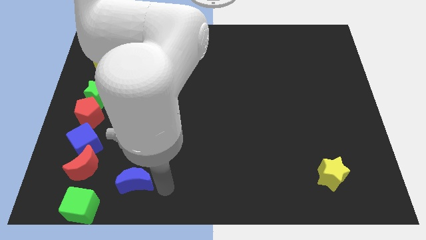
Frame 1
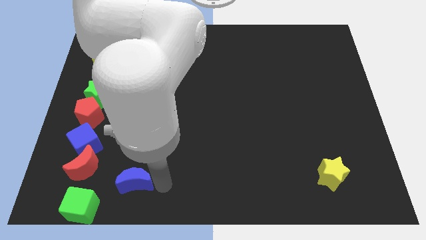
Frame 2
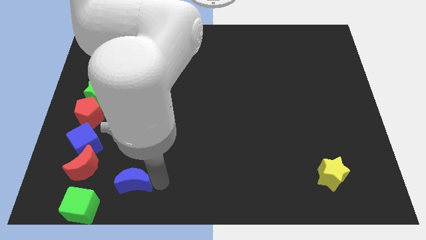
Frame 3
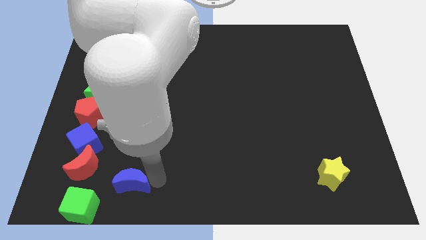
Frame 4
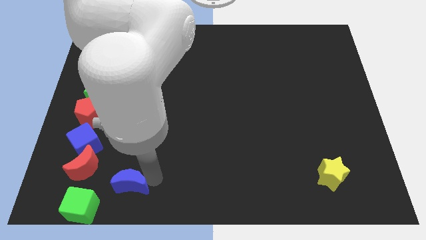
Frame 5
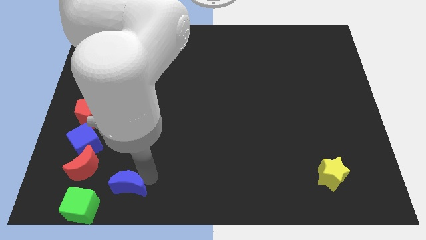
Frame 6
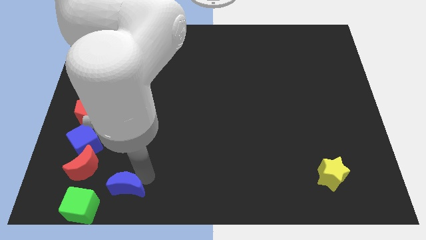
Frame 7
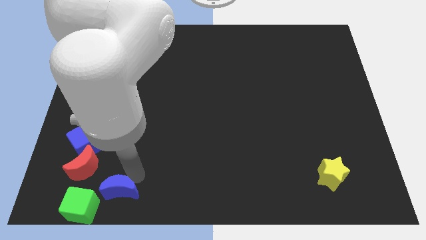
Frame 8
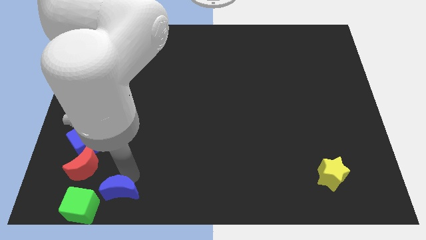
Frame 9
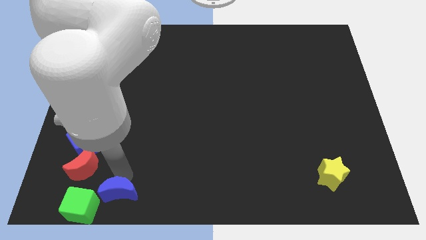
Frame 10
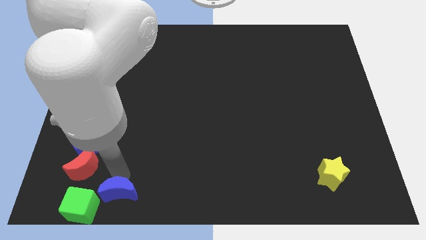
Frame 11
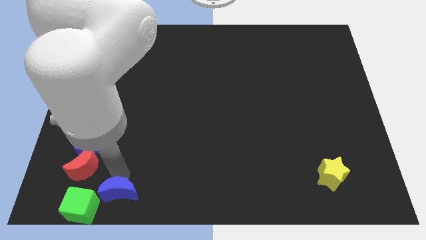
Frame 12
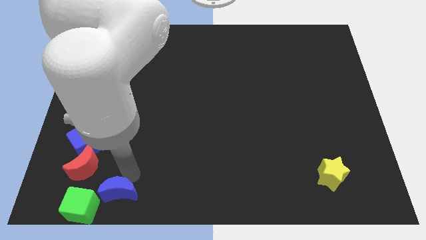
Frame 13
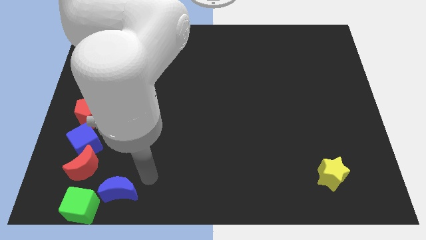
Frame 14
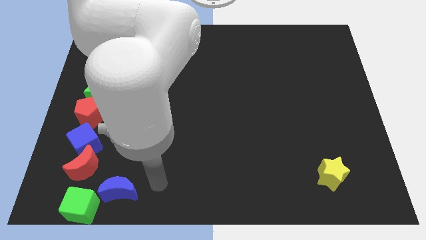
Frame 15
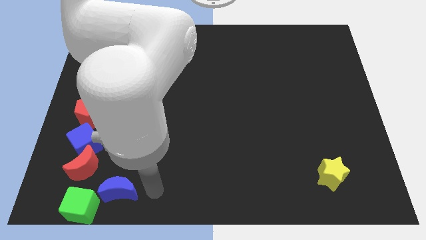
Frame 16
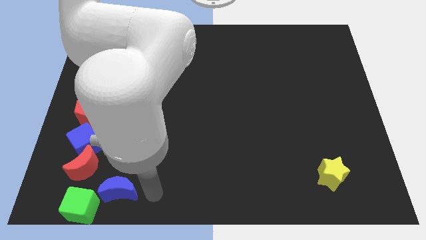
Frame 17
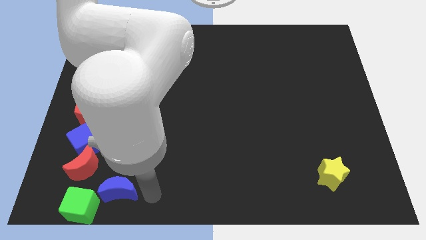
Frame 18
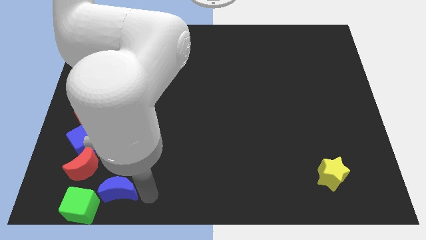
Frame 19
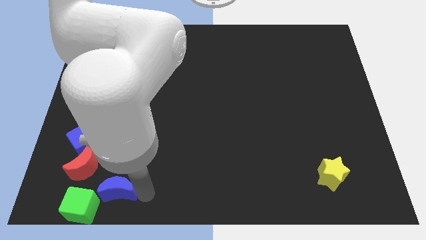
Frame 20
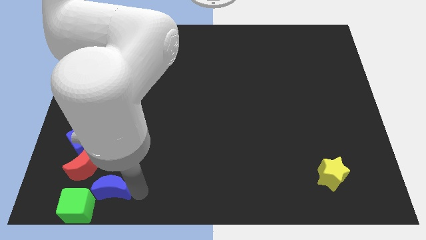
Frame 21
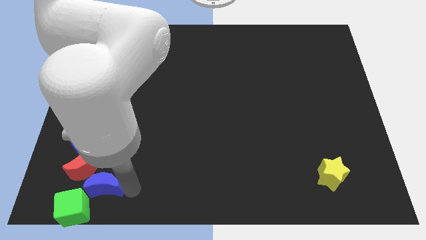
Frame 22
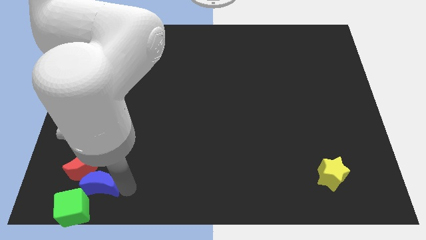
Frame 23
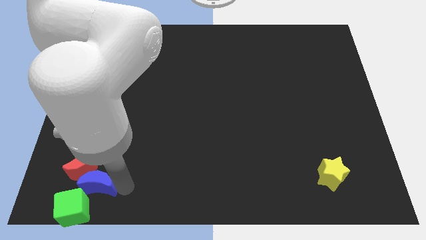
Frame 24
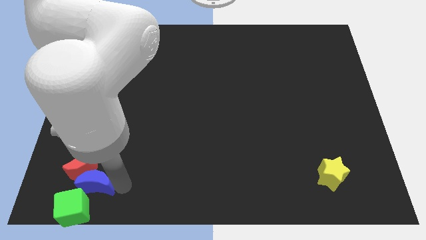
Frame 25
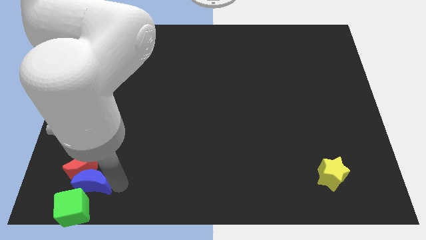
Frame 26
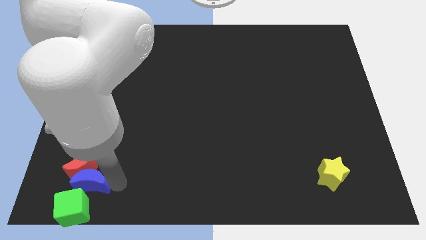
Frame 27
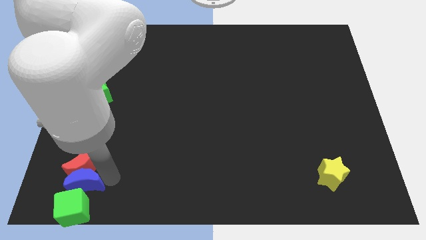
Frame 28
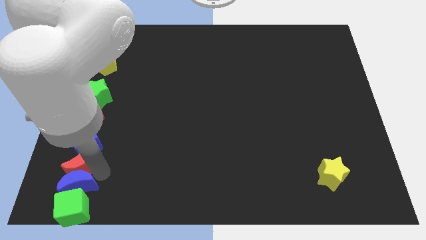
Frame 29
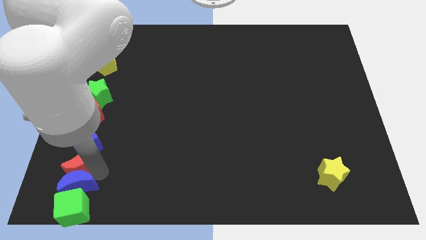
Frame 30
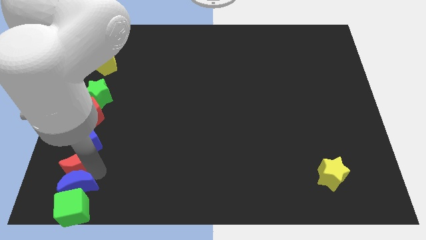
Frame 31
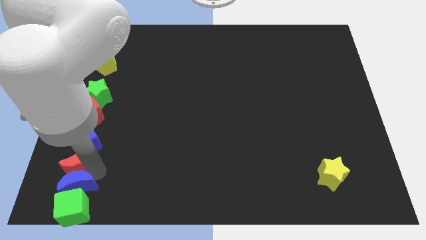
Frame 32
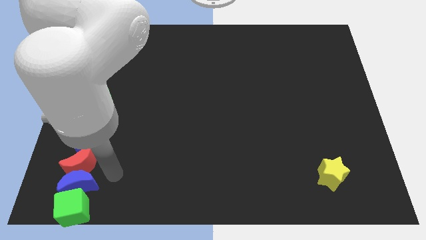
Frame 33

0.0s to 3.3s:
push the blue moon down to the red moon

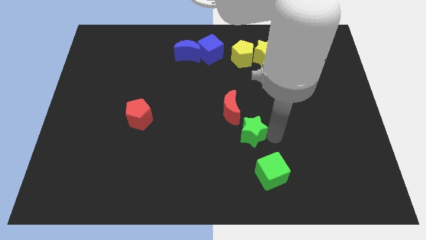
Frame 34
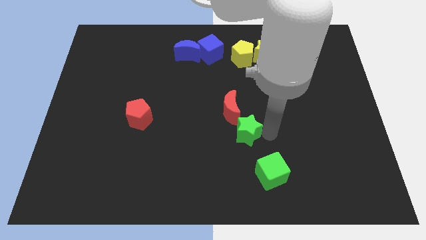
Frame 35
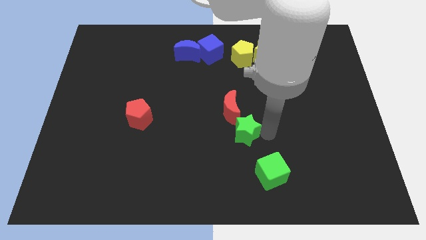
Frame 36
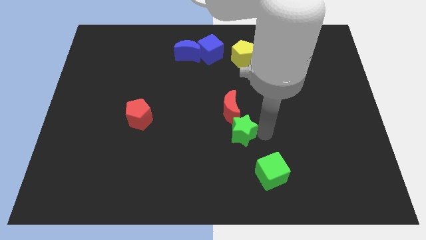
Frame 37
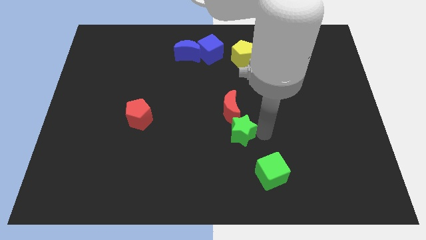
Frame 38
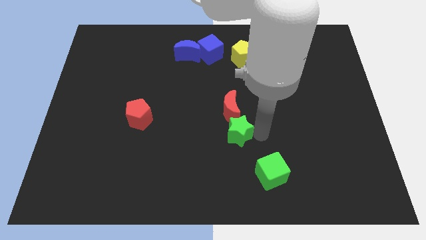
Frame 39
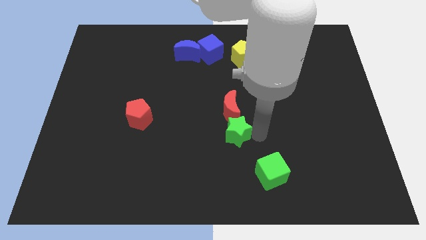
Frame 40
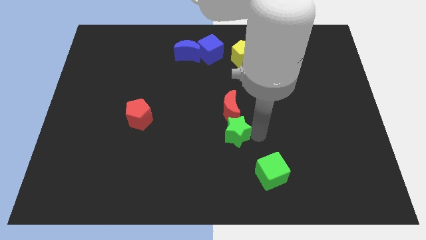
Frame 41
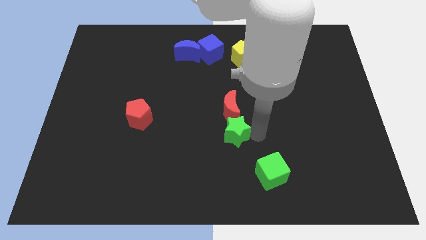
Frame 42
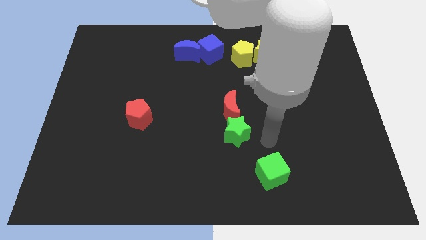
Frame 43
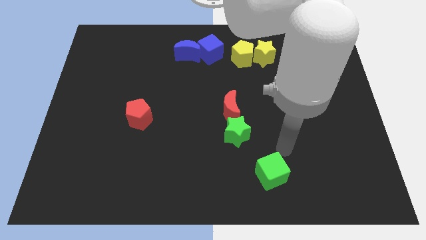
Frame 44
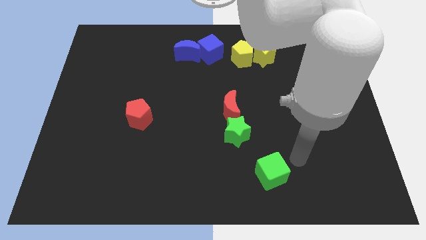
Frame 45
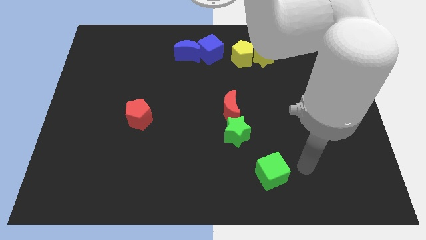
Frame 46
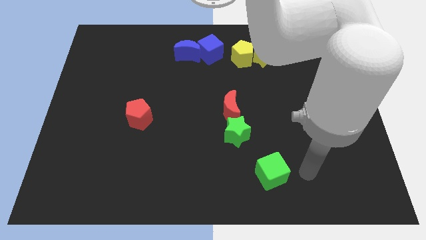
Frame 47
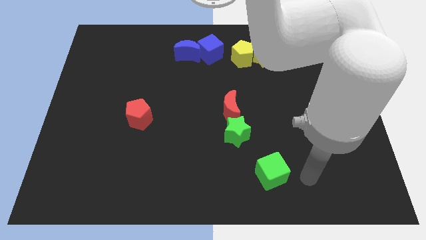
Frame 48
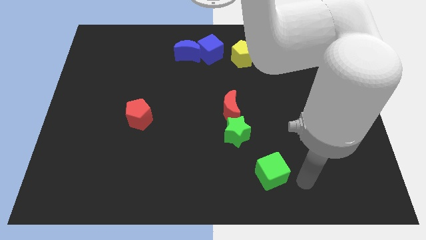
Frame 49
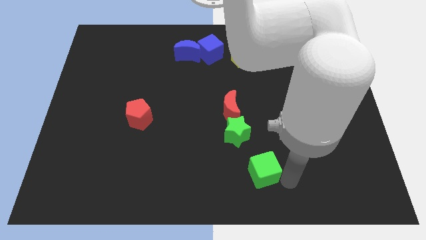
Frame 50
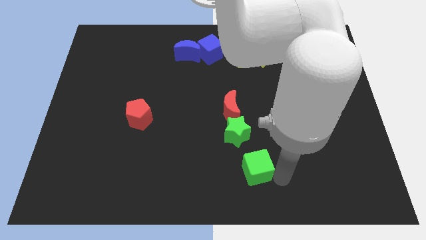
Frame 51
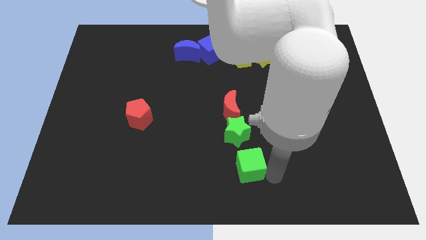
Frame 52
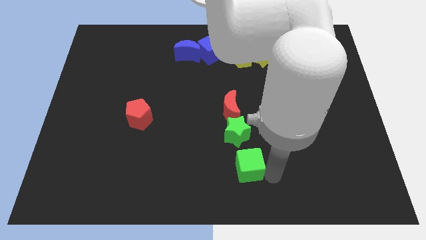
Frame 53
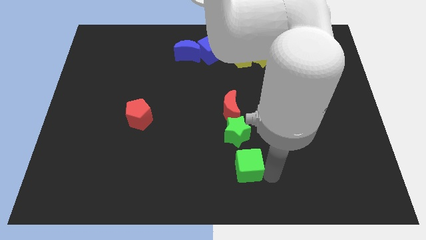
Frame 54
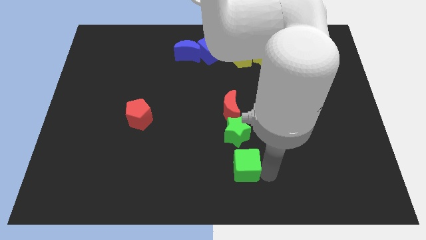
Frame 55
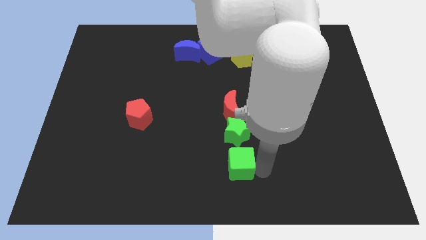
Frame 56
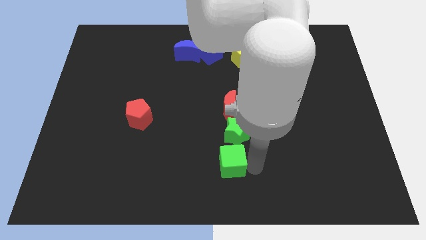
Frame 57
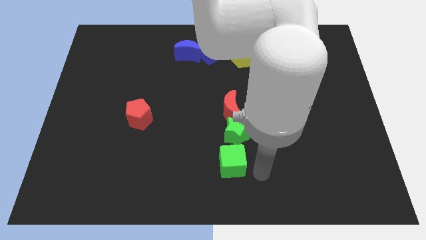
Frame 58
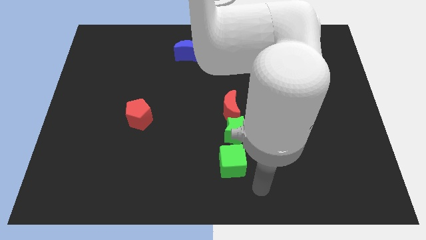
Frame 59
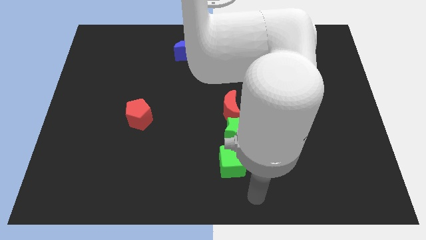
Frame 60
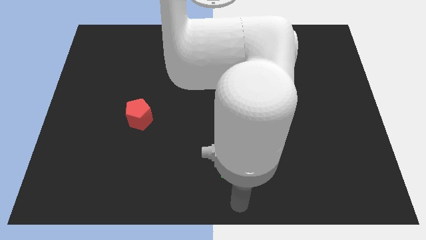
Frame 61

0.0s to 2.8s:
move the green blocks below the red moon

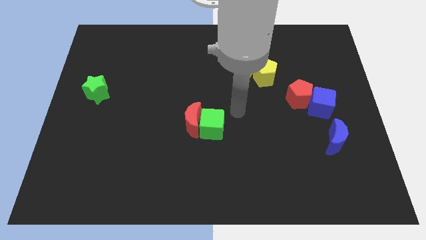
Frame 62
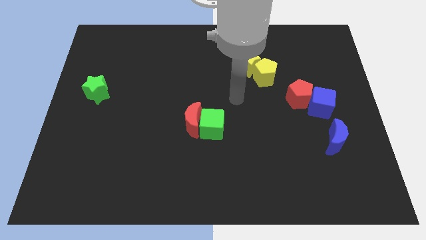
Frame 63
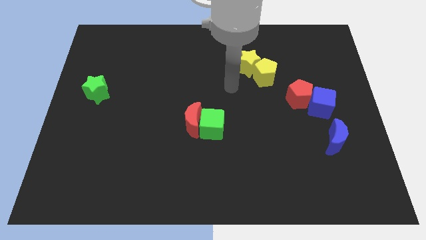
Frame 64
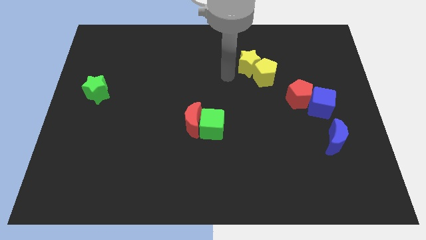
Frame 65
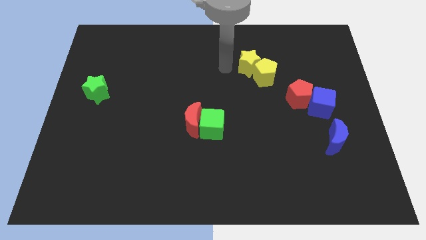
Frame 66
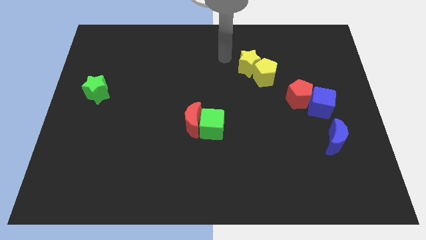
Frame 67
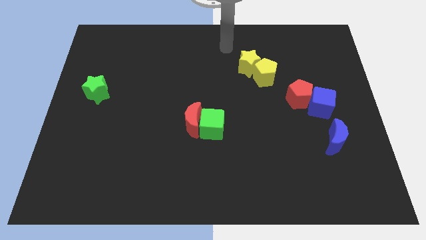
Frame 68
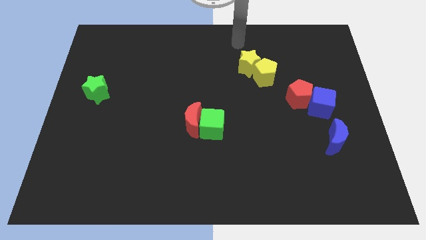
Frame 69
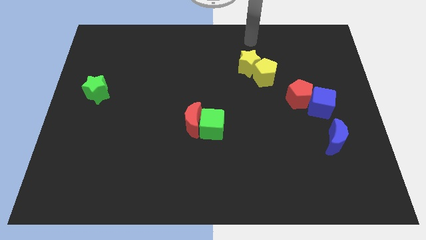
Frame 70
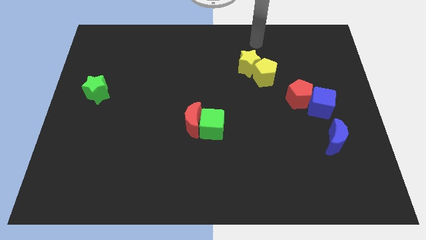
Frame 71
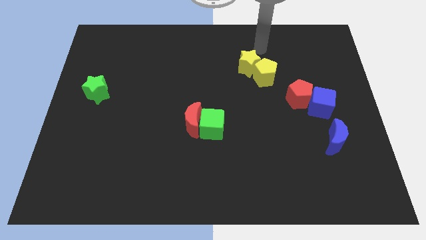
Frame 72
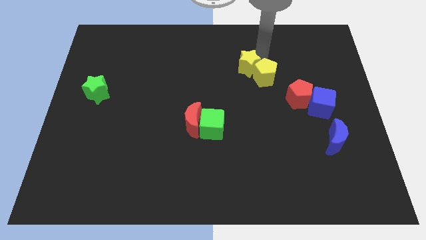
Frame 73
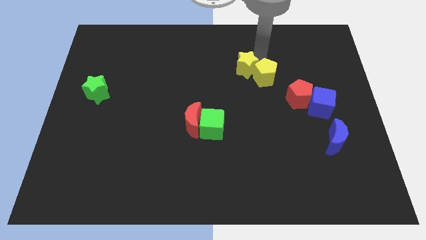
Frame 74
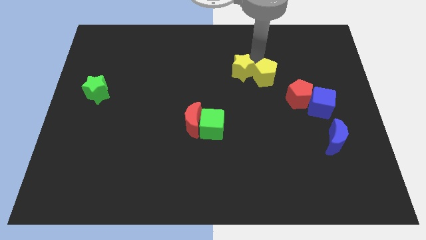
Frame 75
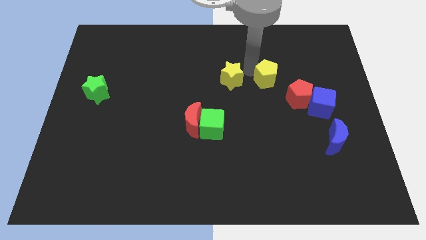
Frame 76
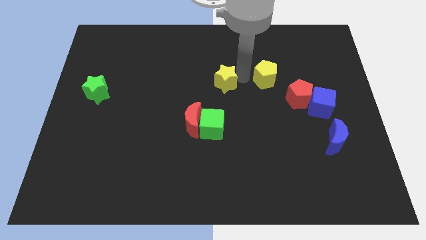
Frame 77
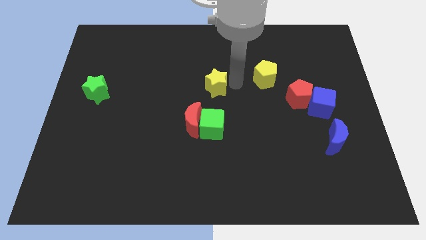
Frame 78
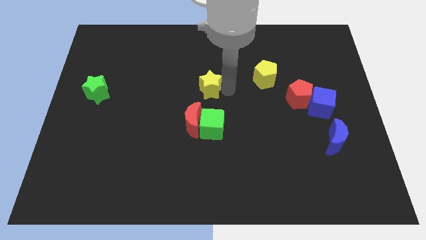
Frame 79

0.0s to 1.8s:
separate the yellow star from yellow pentagon

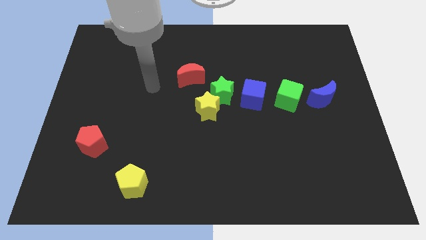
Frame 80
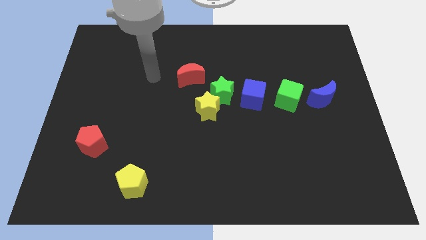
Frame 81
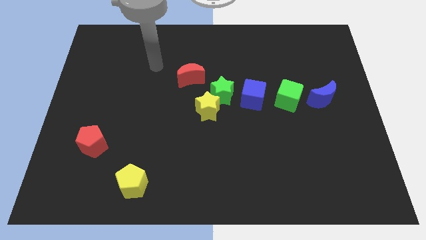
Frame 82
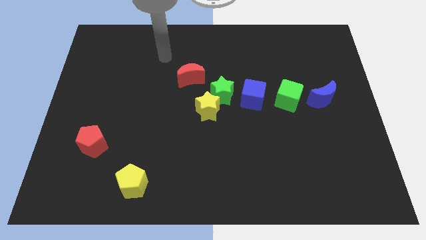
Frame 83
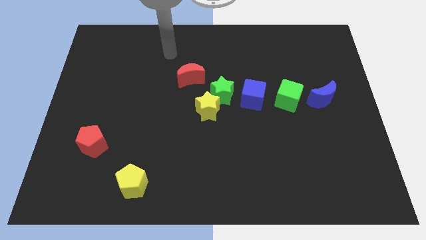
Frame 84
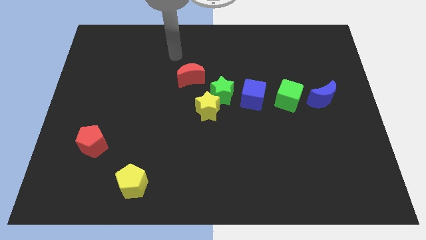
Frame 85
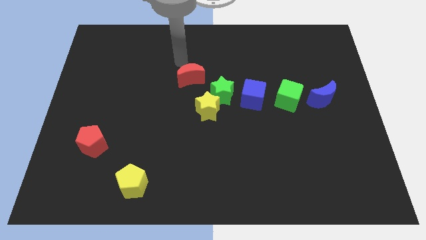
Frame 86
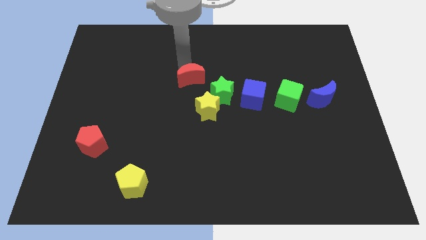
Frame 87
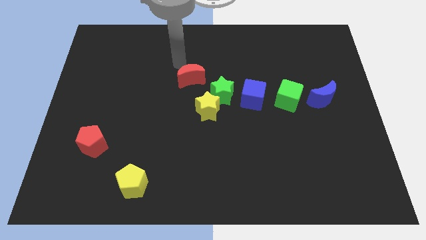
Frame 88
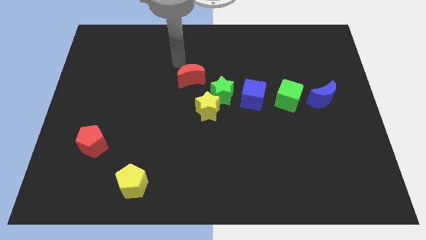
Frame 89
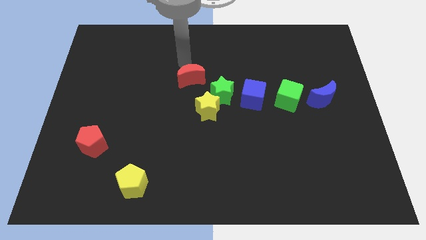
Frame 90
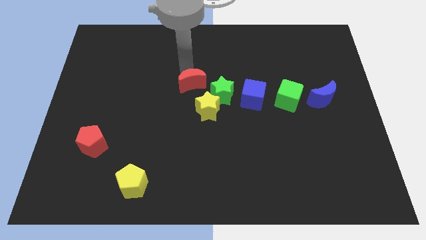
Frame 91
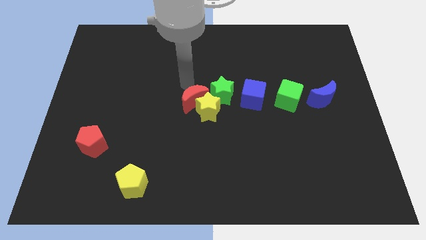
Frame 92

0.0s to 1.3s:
push the red crescent in the center
